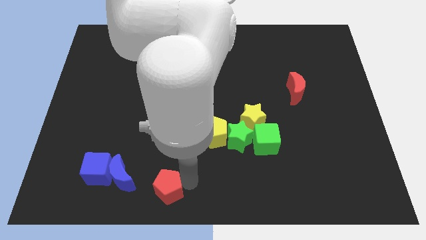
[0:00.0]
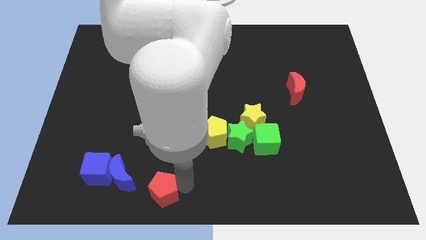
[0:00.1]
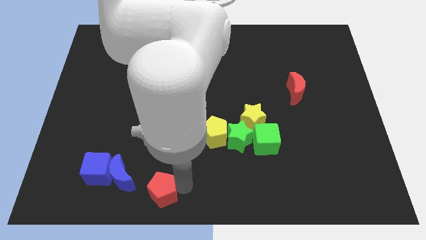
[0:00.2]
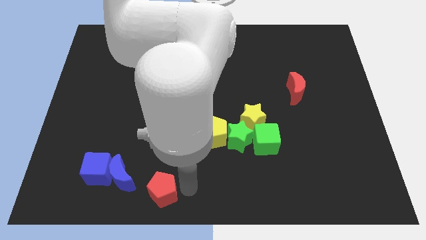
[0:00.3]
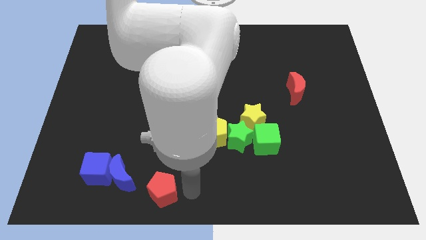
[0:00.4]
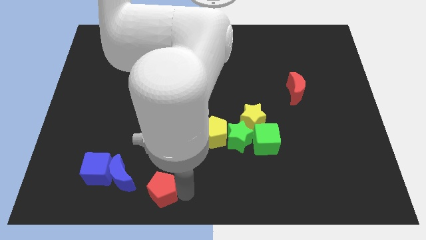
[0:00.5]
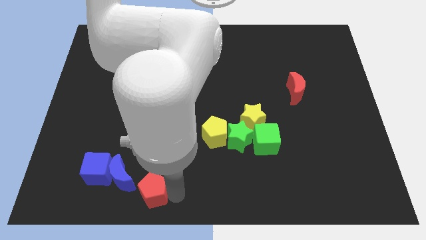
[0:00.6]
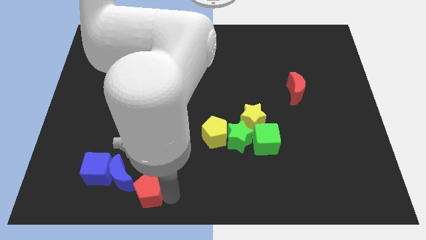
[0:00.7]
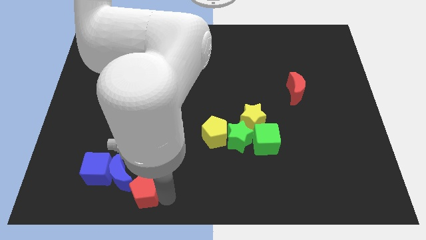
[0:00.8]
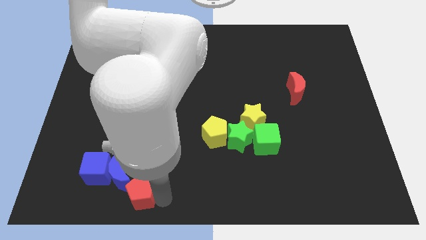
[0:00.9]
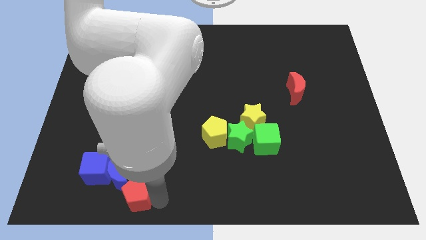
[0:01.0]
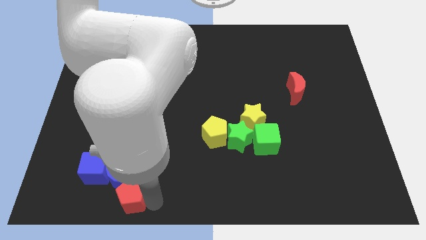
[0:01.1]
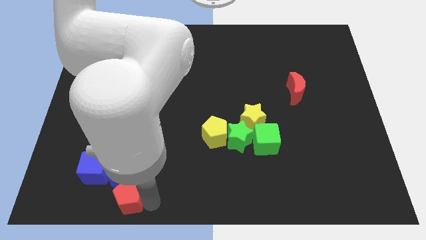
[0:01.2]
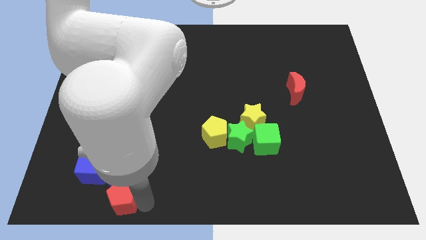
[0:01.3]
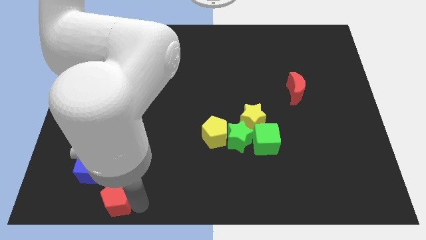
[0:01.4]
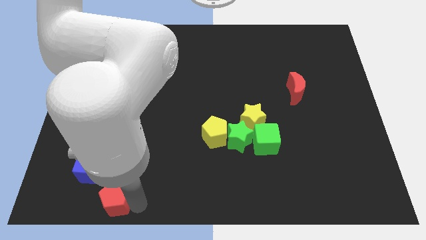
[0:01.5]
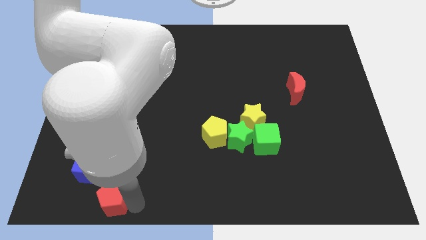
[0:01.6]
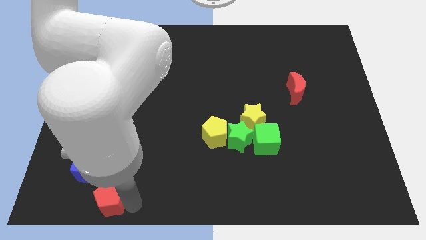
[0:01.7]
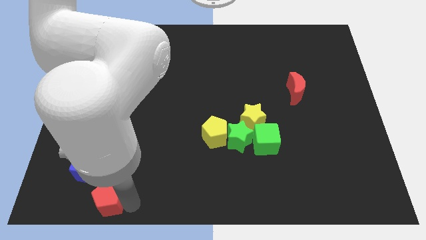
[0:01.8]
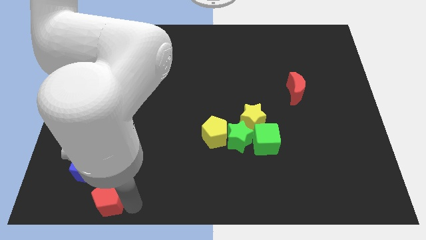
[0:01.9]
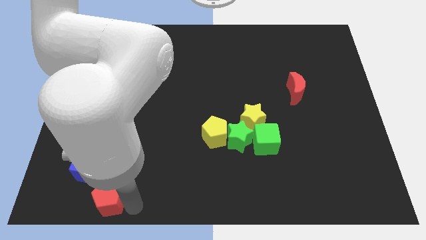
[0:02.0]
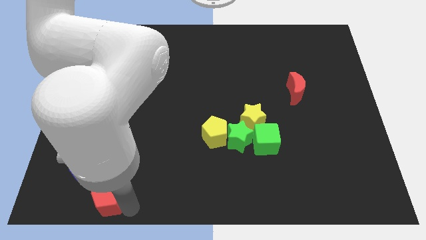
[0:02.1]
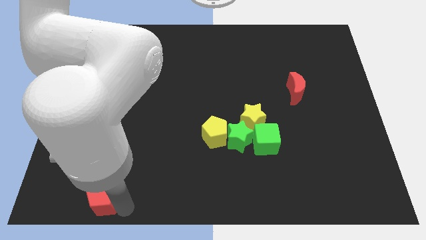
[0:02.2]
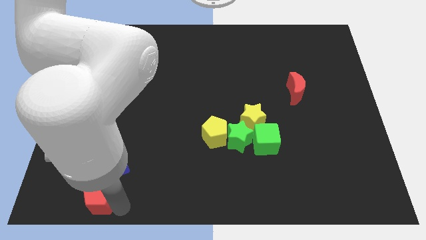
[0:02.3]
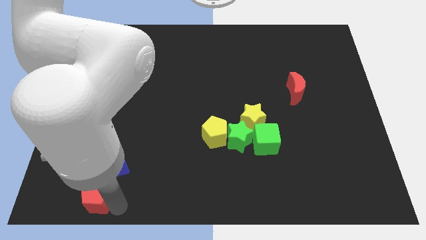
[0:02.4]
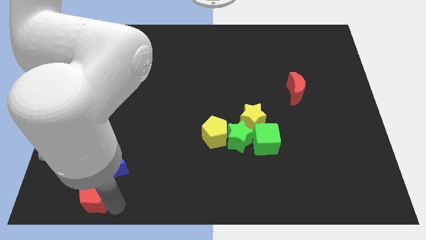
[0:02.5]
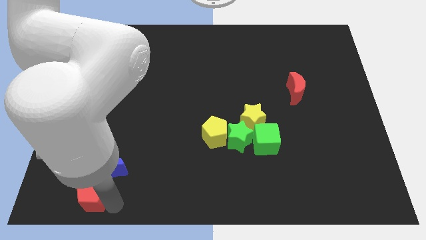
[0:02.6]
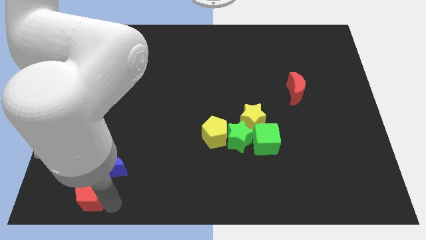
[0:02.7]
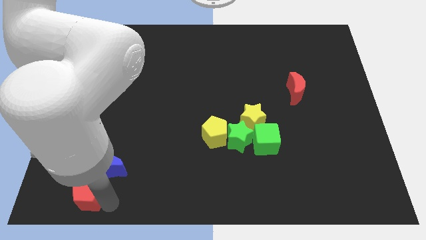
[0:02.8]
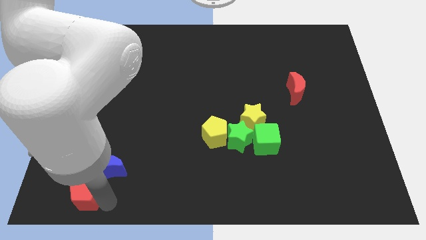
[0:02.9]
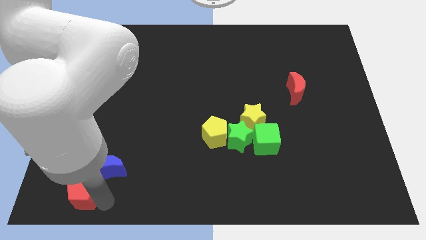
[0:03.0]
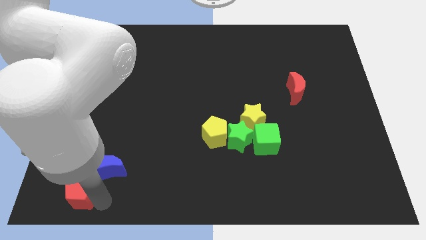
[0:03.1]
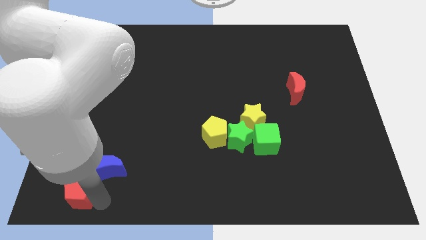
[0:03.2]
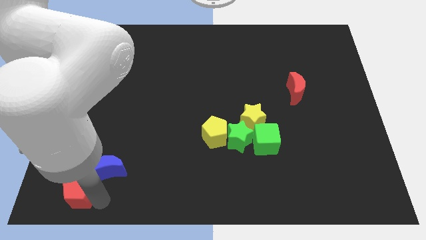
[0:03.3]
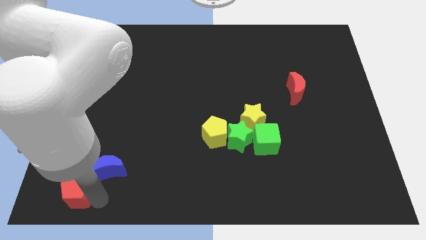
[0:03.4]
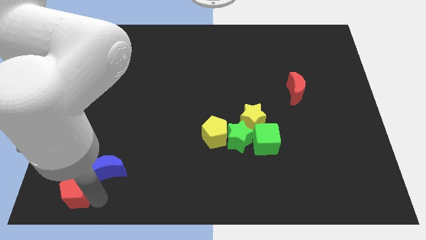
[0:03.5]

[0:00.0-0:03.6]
move the red pentagon towards the blue crescent

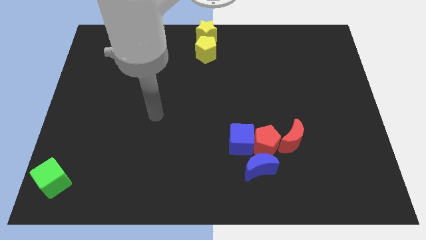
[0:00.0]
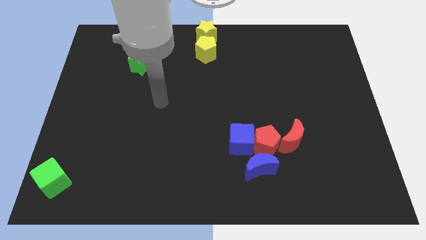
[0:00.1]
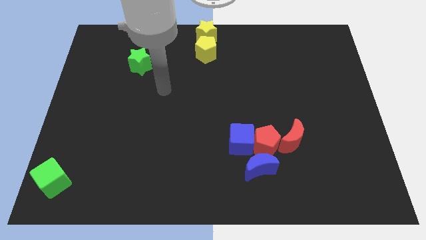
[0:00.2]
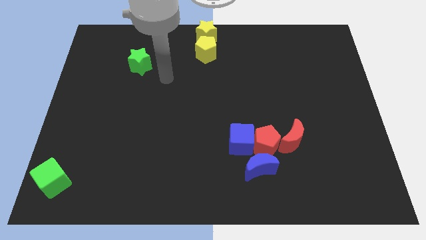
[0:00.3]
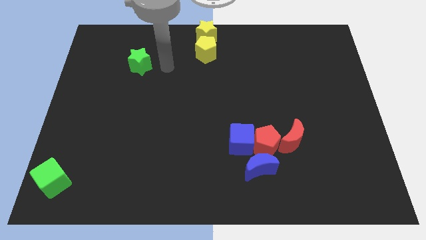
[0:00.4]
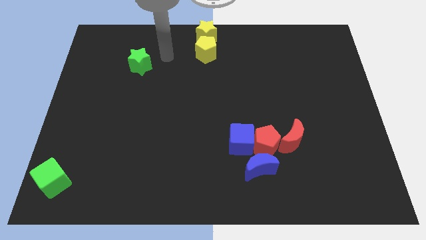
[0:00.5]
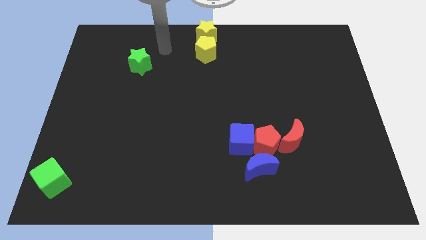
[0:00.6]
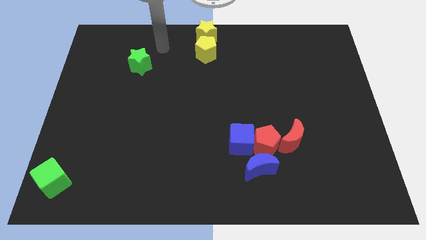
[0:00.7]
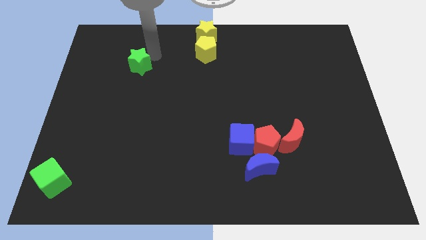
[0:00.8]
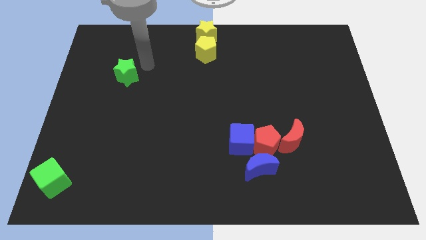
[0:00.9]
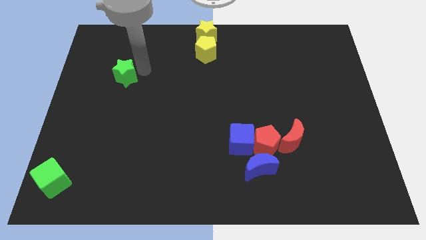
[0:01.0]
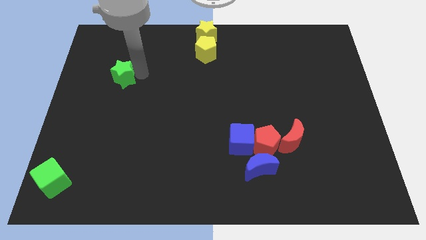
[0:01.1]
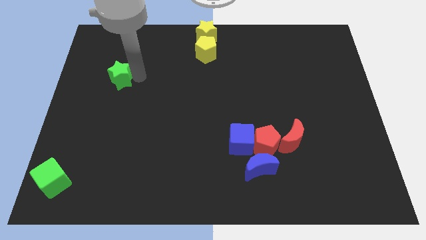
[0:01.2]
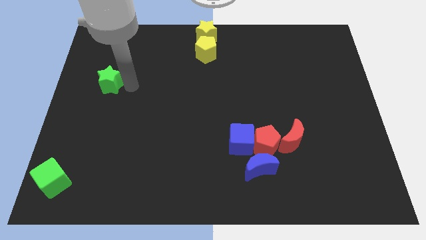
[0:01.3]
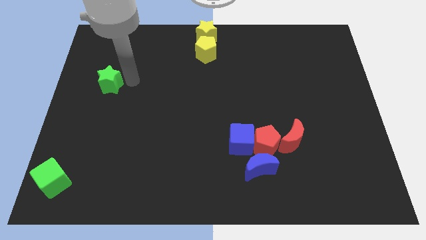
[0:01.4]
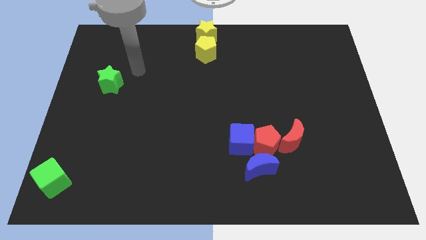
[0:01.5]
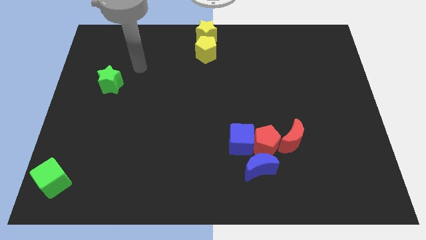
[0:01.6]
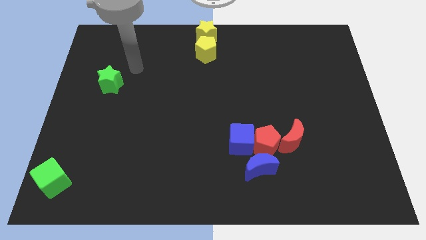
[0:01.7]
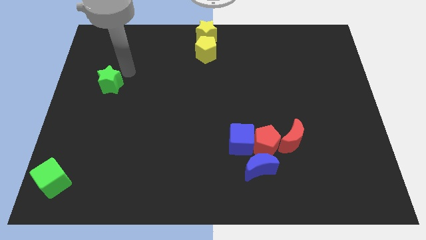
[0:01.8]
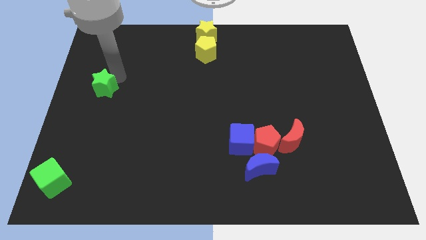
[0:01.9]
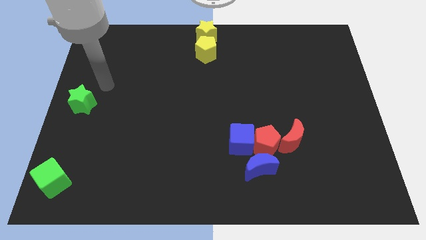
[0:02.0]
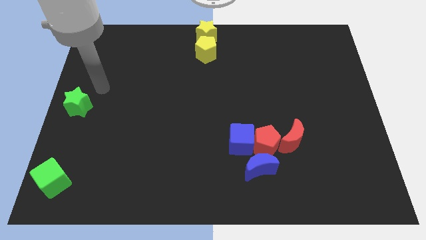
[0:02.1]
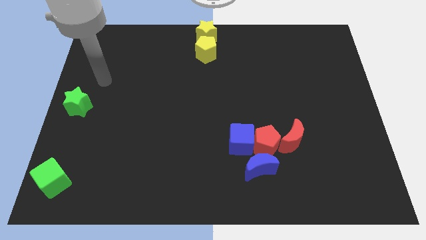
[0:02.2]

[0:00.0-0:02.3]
move the green star to the center left of the board

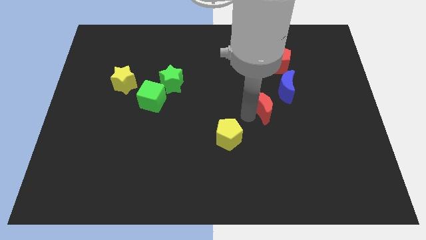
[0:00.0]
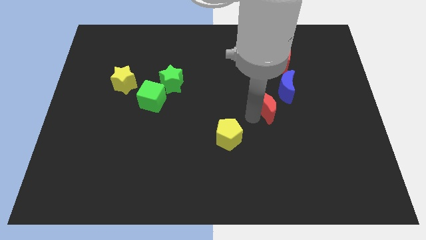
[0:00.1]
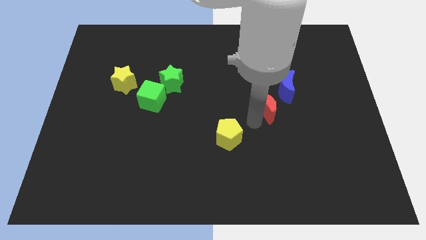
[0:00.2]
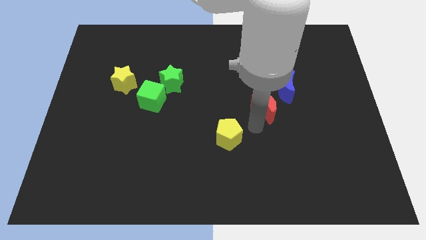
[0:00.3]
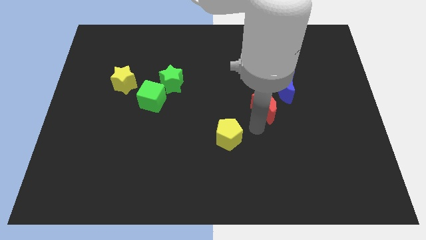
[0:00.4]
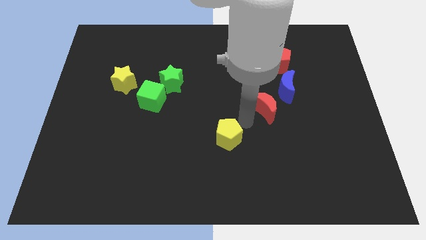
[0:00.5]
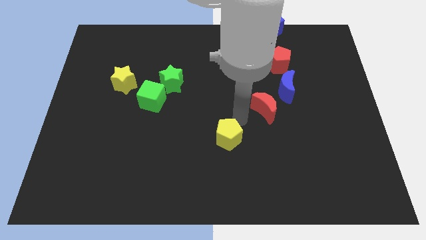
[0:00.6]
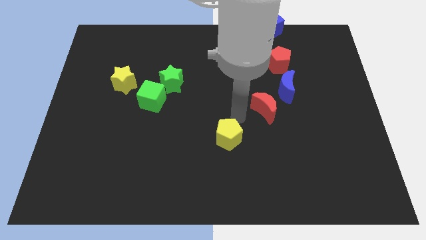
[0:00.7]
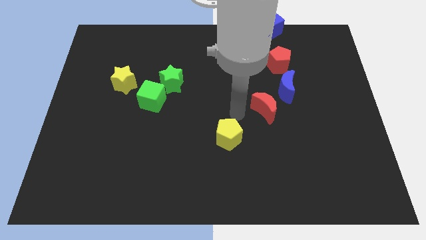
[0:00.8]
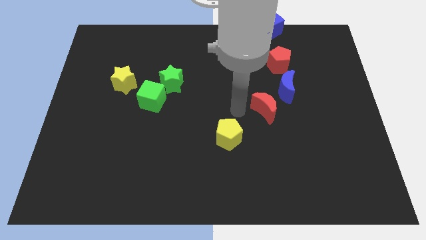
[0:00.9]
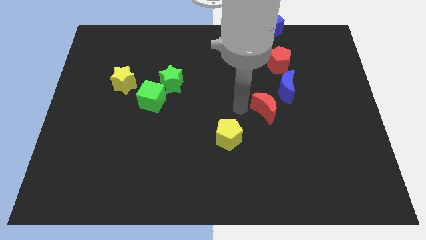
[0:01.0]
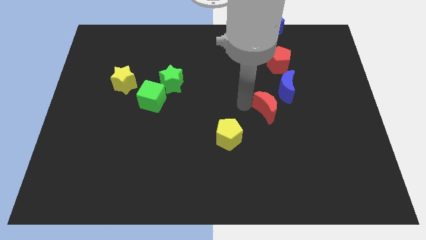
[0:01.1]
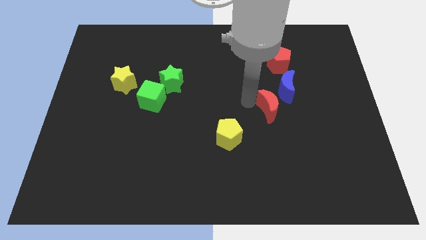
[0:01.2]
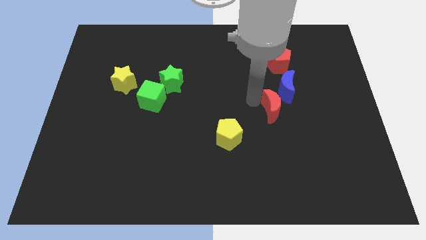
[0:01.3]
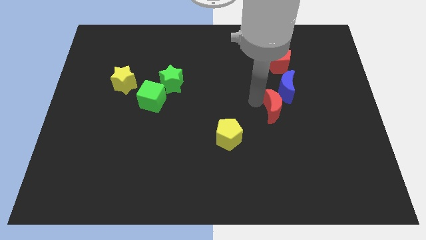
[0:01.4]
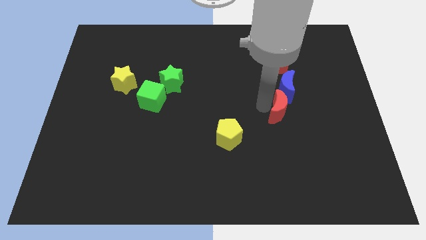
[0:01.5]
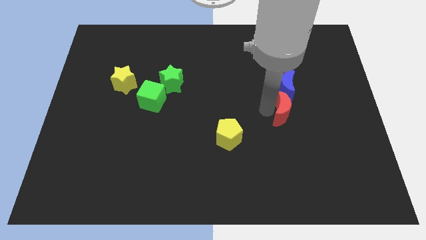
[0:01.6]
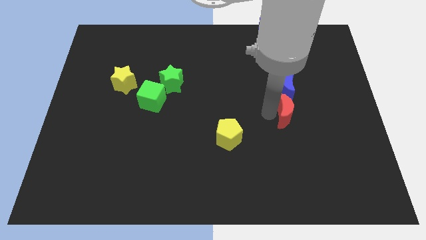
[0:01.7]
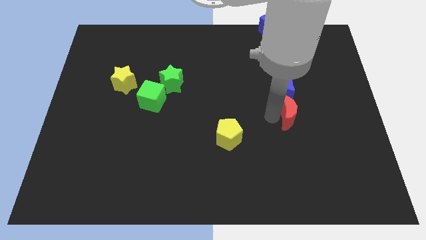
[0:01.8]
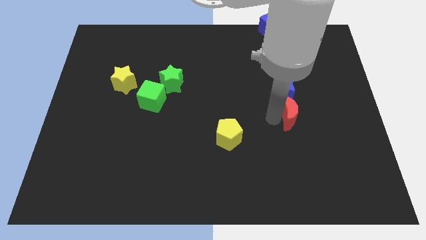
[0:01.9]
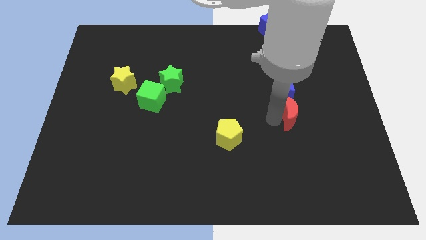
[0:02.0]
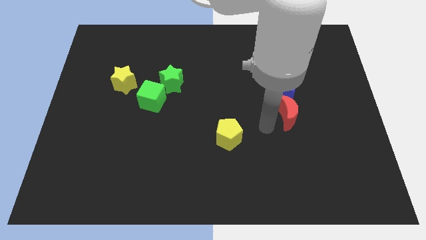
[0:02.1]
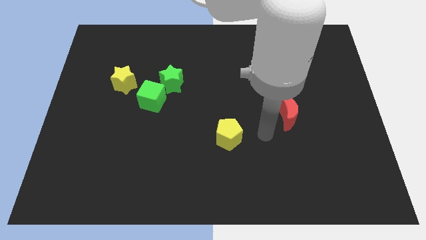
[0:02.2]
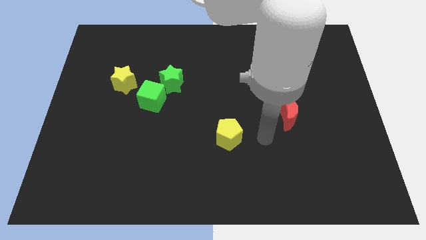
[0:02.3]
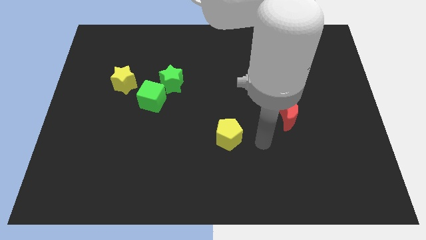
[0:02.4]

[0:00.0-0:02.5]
move red moon at the bottom of blue crescent

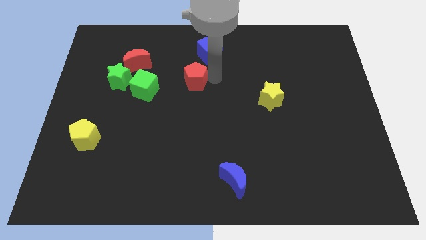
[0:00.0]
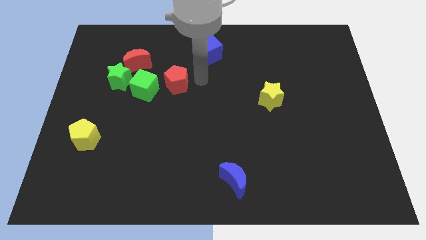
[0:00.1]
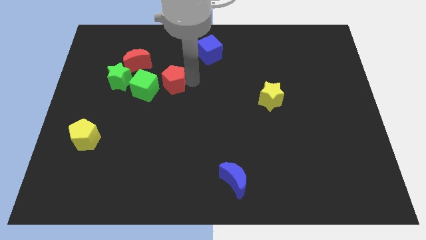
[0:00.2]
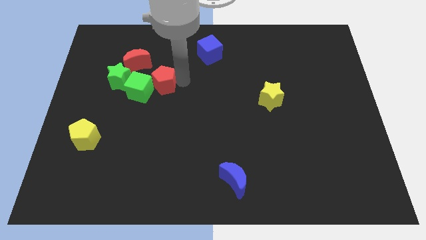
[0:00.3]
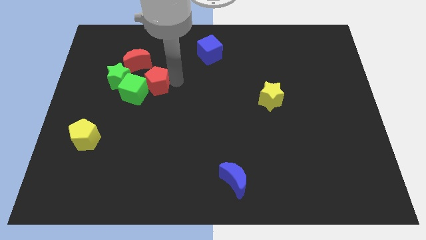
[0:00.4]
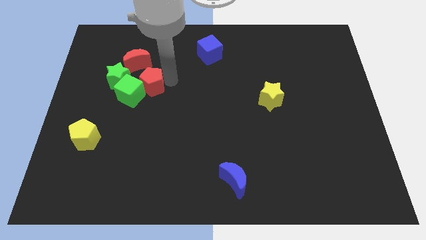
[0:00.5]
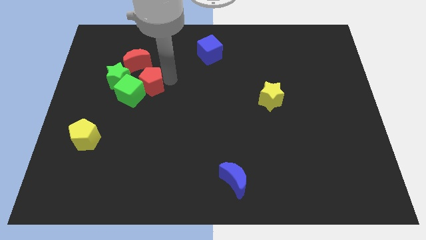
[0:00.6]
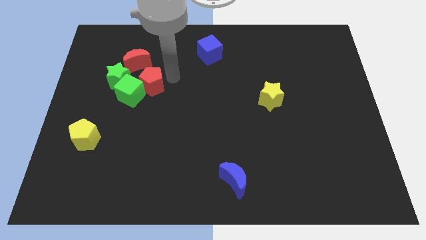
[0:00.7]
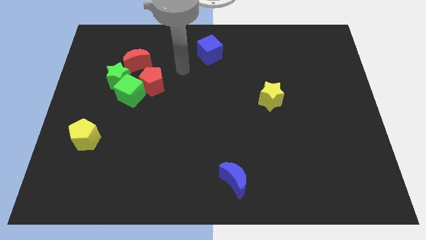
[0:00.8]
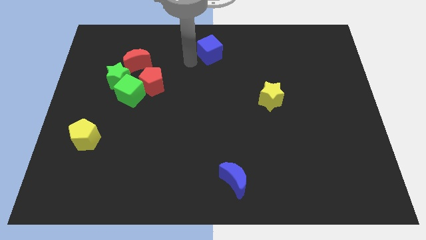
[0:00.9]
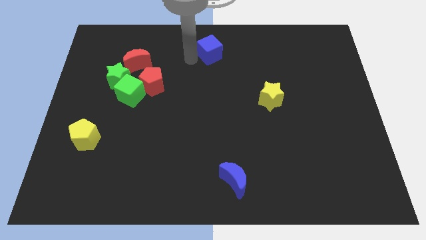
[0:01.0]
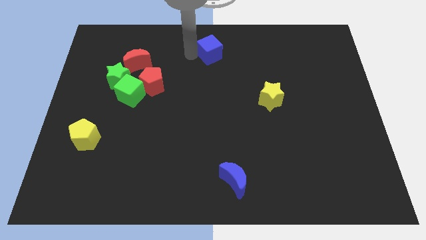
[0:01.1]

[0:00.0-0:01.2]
push the green cube with red pentagon
